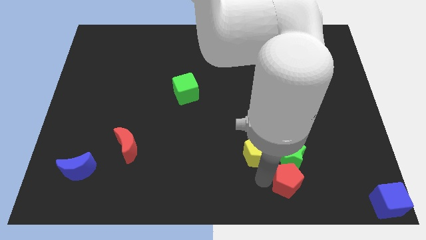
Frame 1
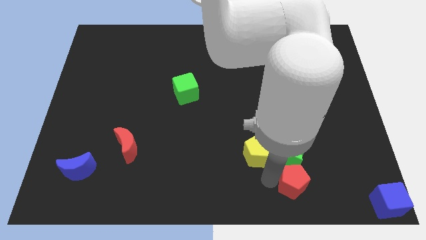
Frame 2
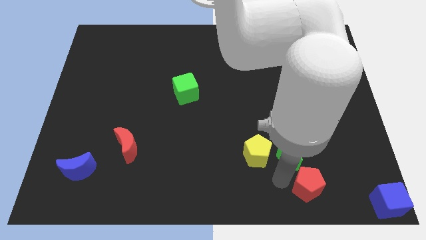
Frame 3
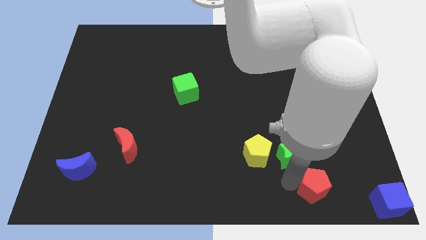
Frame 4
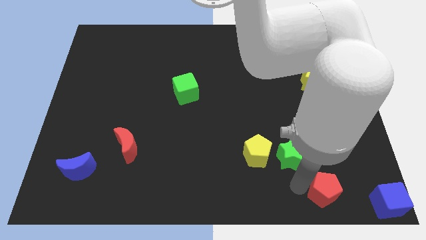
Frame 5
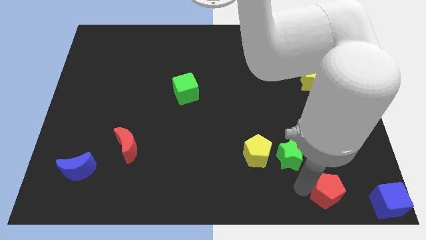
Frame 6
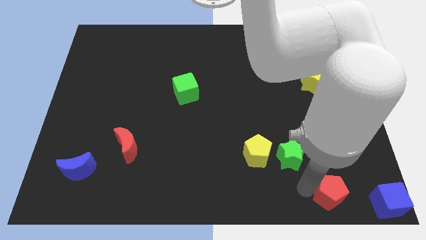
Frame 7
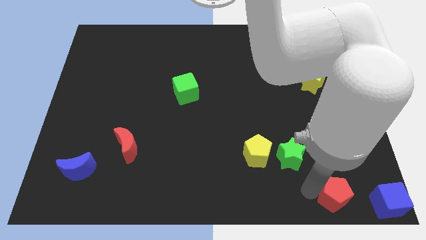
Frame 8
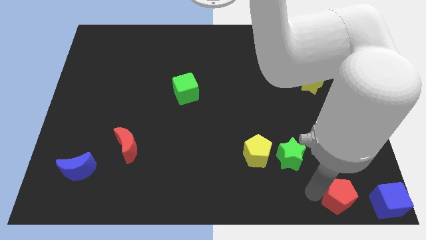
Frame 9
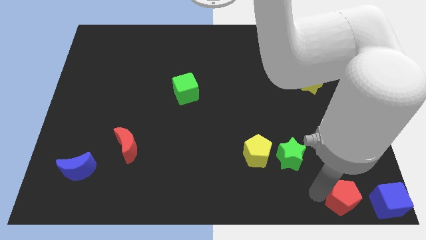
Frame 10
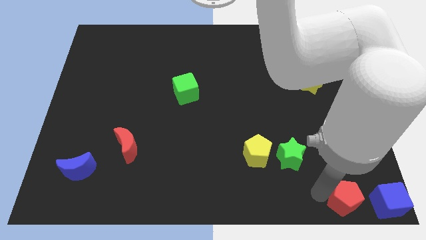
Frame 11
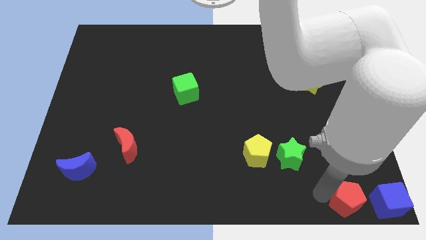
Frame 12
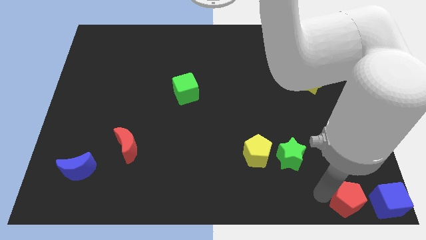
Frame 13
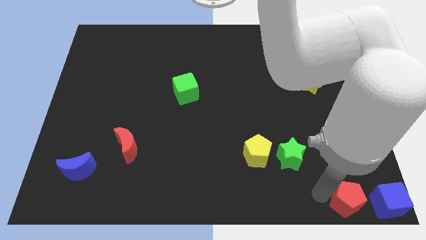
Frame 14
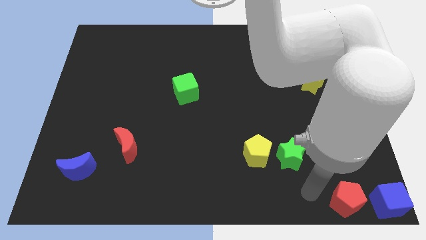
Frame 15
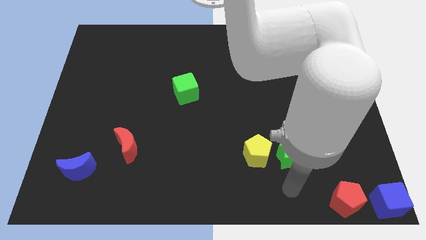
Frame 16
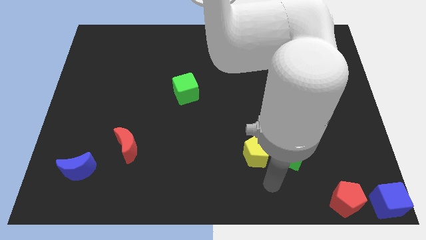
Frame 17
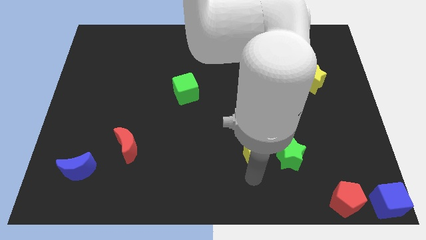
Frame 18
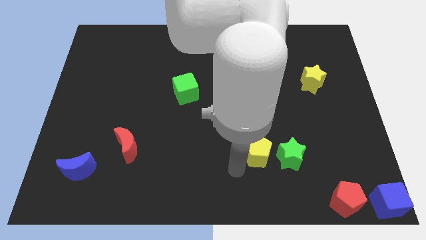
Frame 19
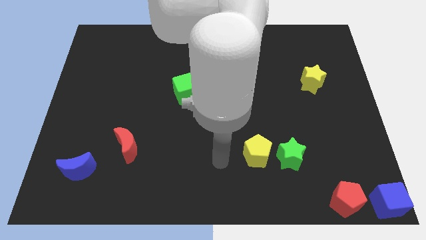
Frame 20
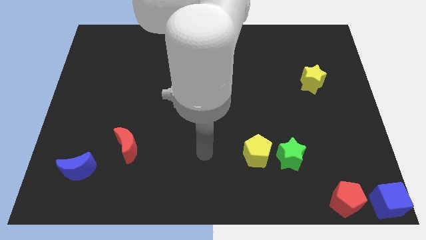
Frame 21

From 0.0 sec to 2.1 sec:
move red pentagon towards the blue cube

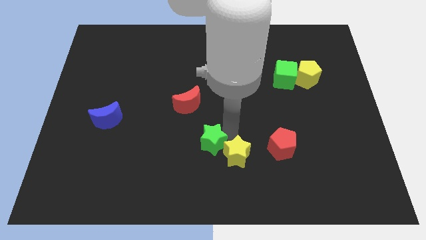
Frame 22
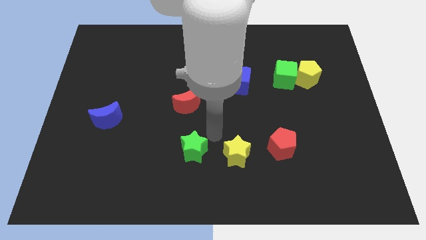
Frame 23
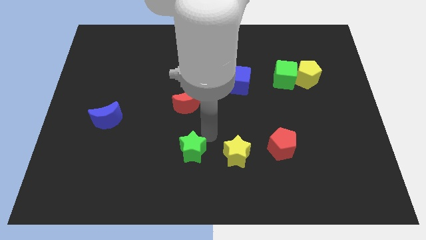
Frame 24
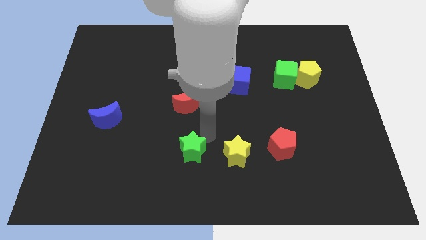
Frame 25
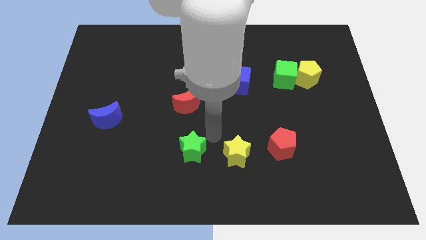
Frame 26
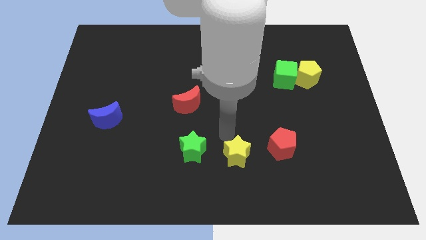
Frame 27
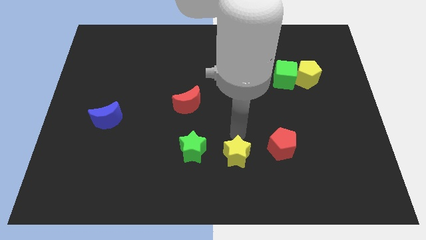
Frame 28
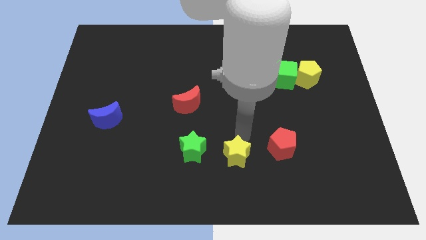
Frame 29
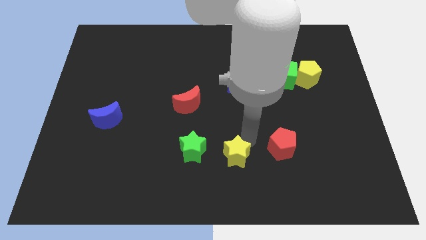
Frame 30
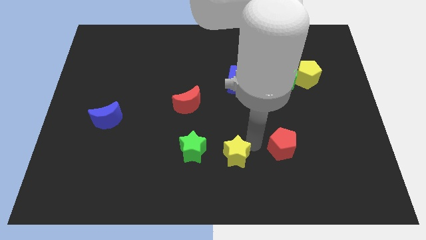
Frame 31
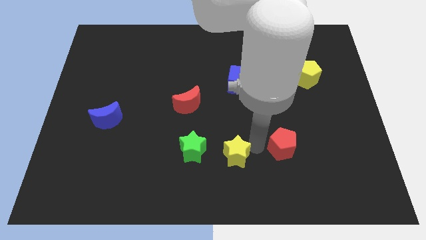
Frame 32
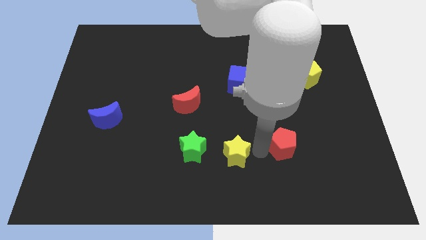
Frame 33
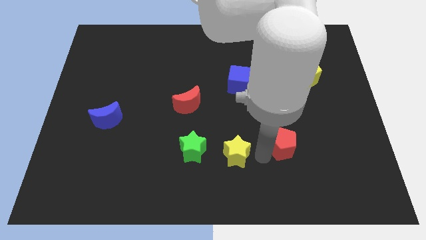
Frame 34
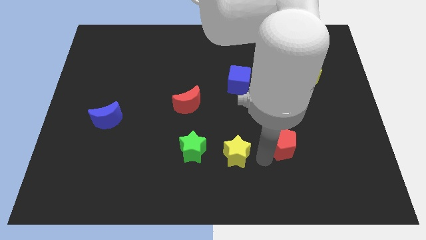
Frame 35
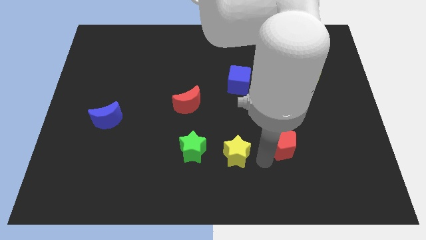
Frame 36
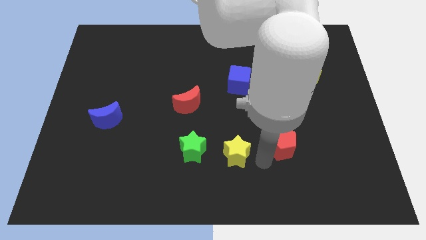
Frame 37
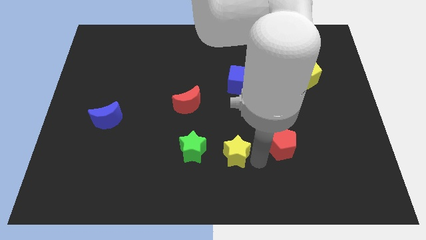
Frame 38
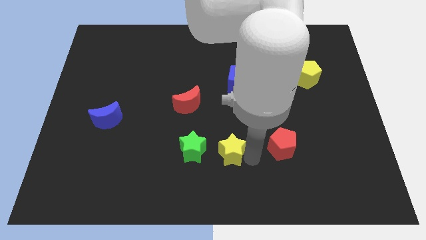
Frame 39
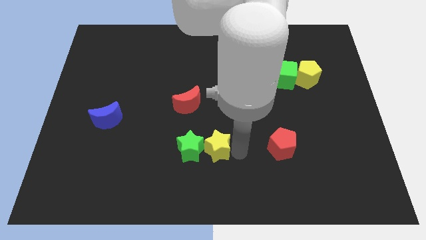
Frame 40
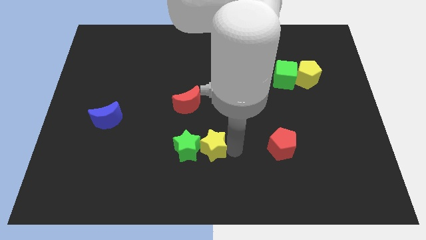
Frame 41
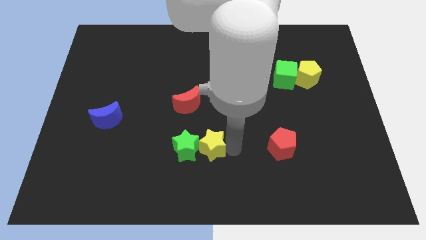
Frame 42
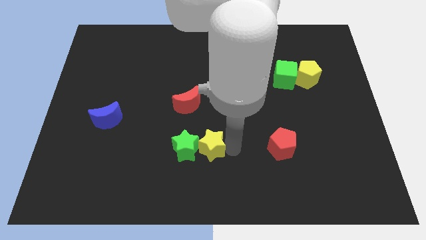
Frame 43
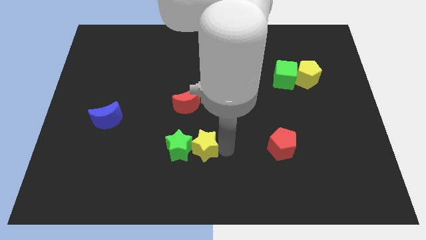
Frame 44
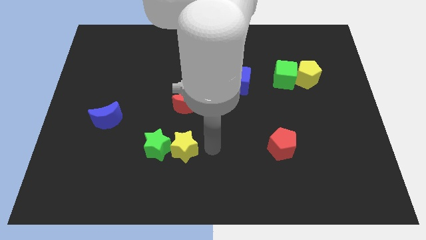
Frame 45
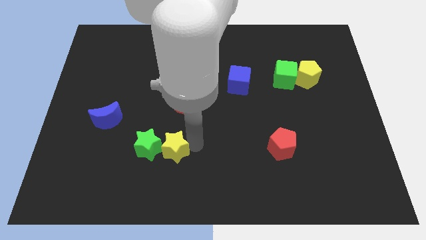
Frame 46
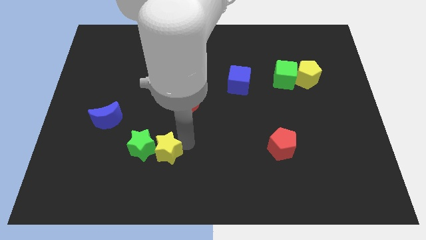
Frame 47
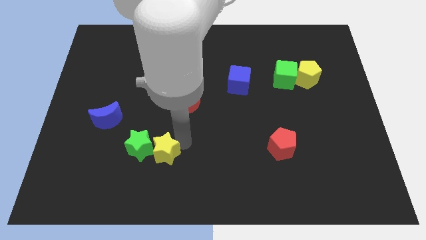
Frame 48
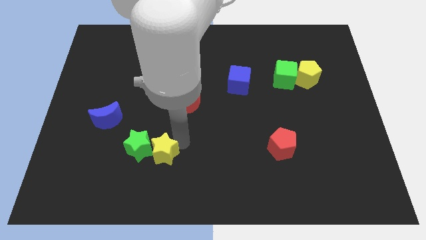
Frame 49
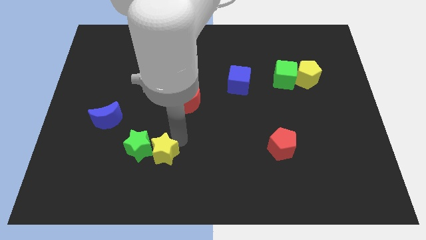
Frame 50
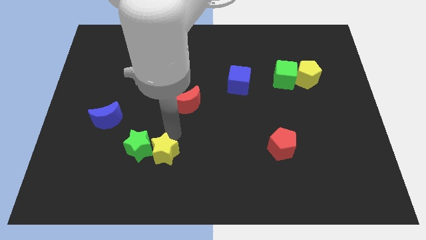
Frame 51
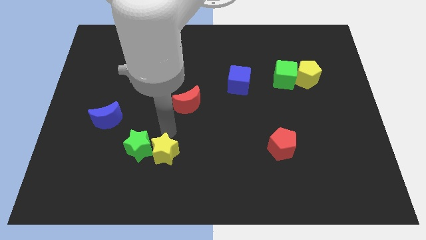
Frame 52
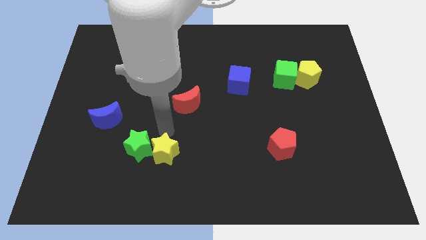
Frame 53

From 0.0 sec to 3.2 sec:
push the green star with the yellow star towards the the bottom left of the board

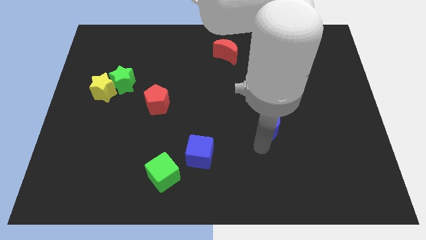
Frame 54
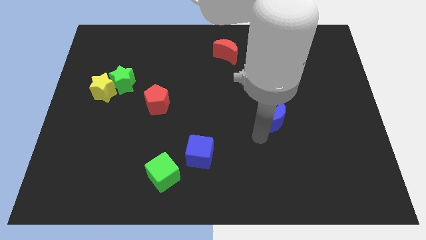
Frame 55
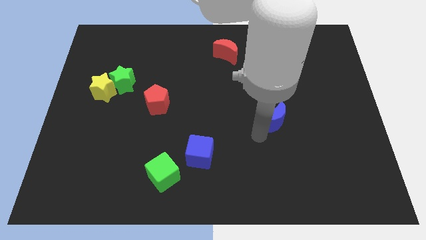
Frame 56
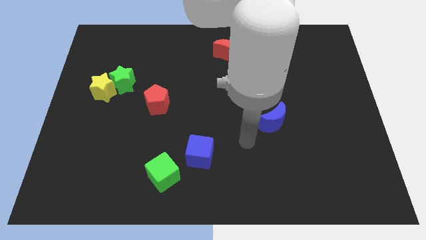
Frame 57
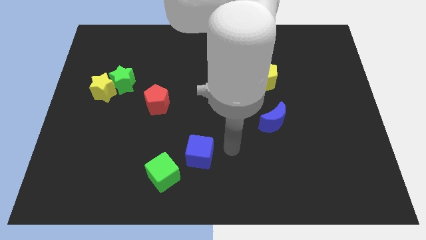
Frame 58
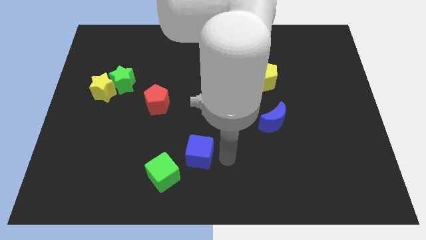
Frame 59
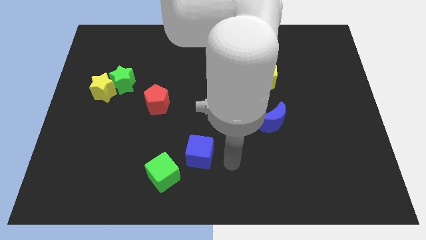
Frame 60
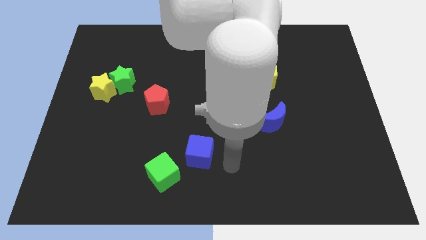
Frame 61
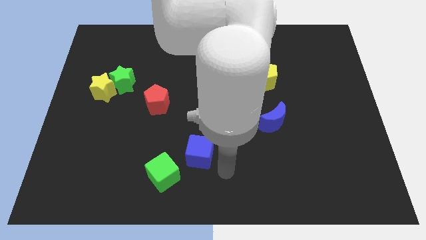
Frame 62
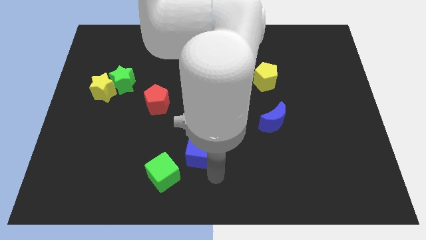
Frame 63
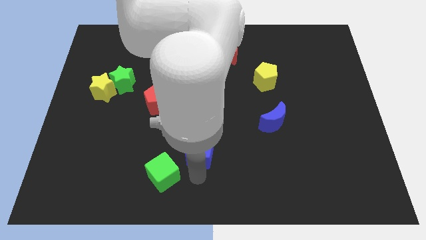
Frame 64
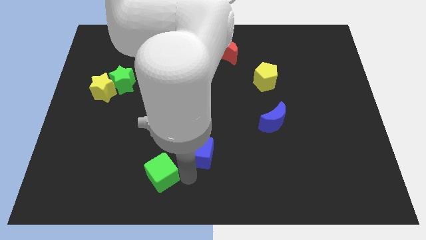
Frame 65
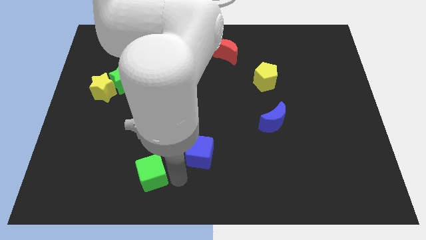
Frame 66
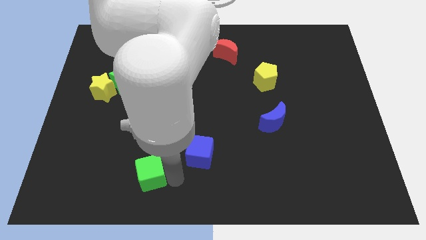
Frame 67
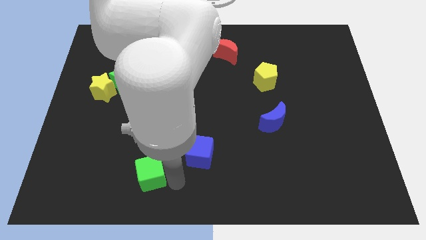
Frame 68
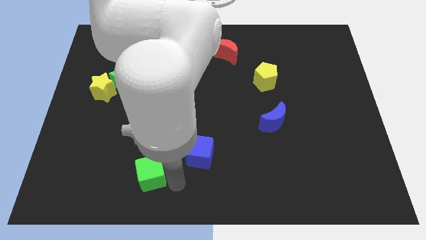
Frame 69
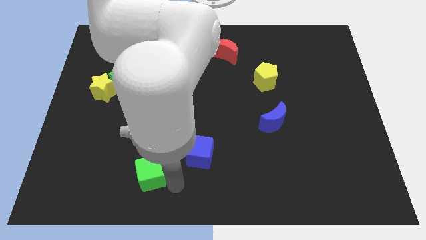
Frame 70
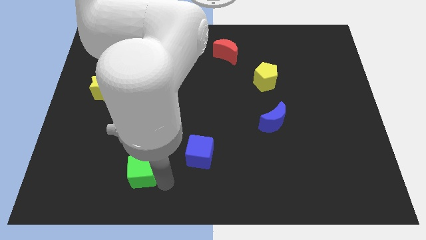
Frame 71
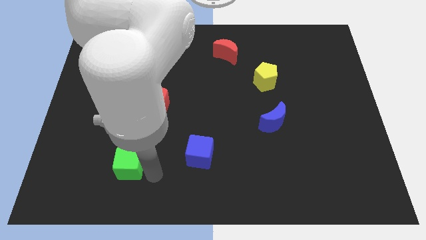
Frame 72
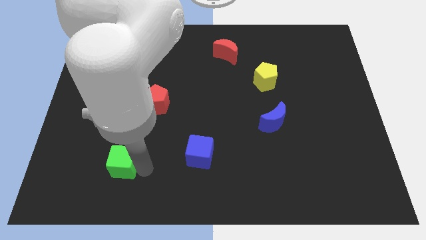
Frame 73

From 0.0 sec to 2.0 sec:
push the green cube towards the left

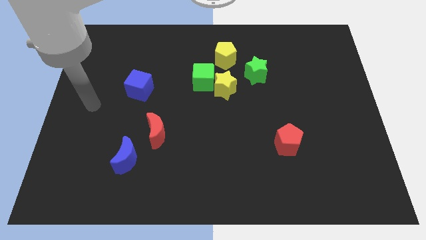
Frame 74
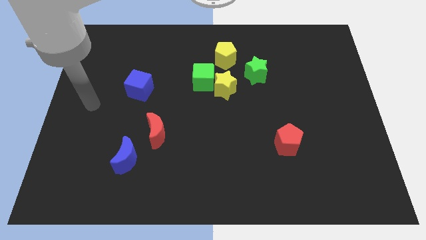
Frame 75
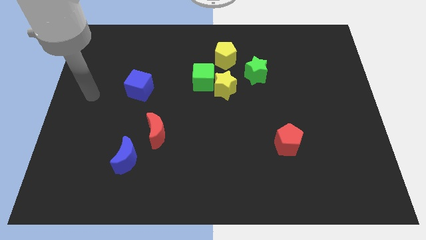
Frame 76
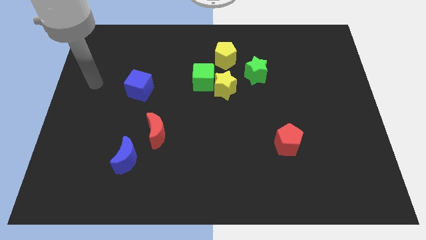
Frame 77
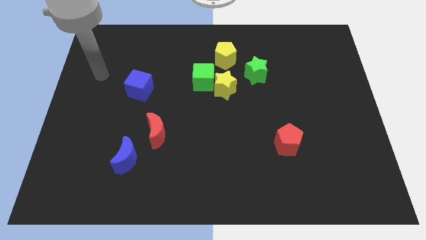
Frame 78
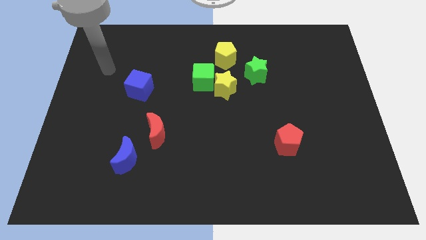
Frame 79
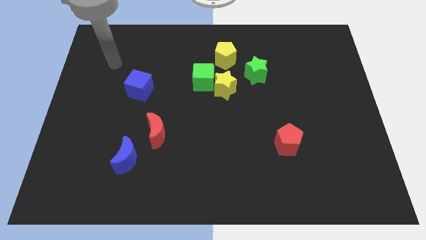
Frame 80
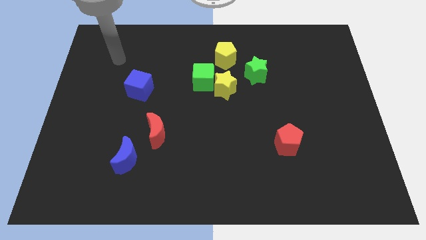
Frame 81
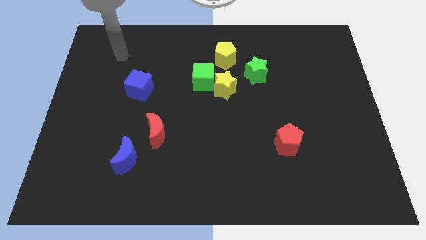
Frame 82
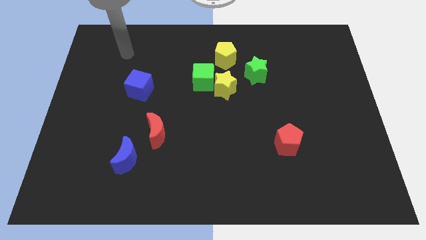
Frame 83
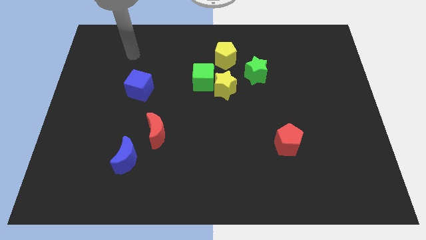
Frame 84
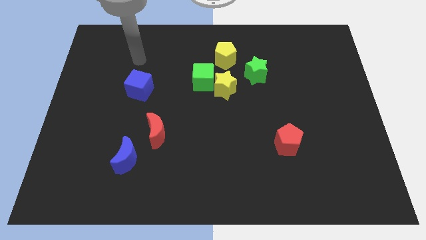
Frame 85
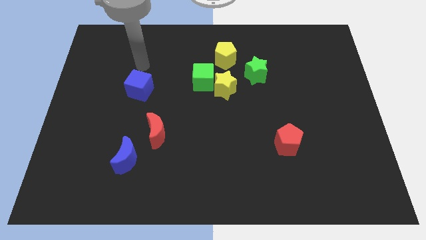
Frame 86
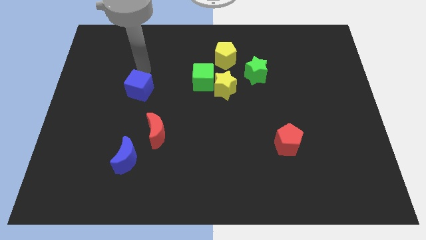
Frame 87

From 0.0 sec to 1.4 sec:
place your hand above the blue cube

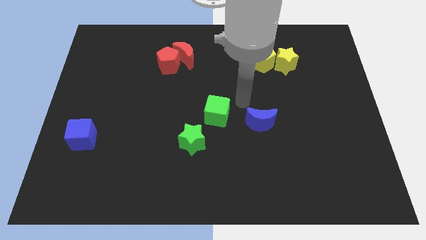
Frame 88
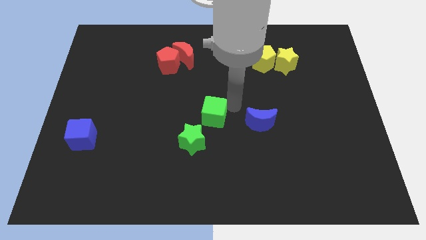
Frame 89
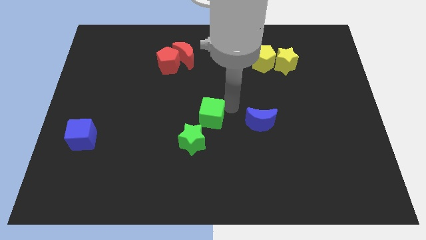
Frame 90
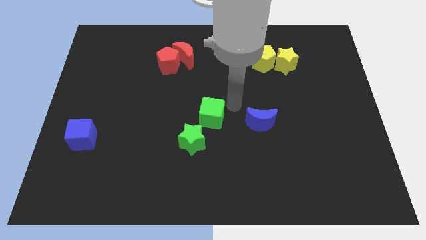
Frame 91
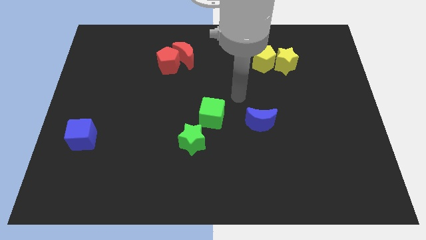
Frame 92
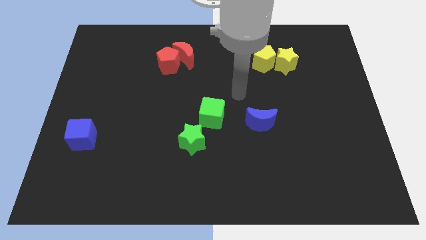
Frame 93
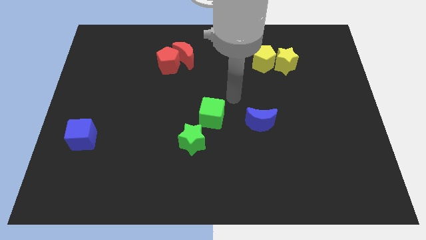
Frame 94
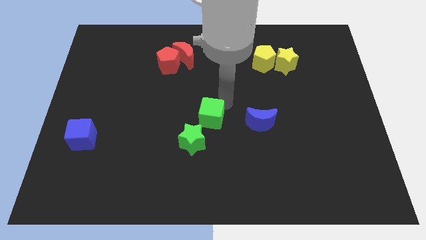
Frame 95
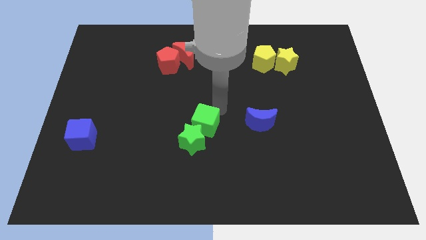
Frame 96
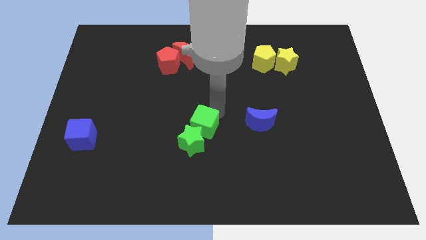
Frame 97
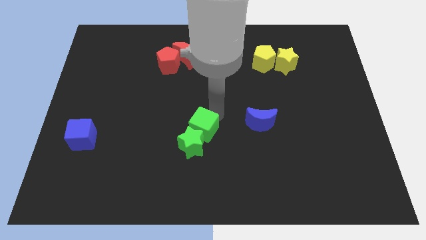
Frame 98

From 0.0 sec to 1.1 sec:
push the green cube into the green star
